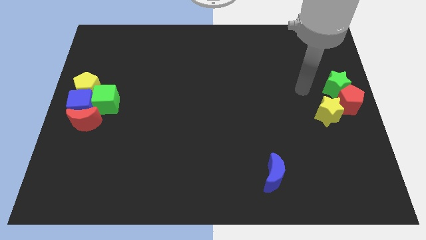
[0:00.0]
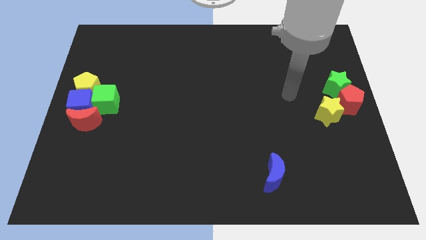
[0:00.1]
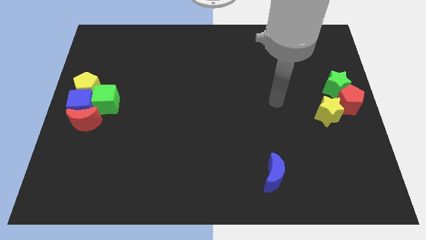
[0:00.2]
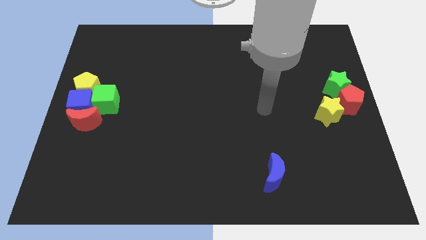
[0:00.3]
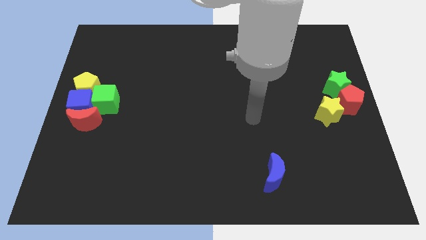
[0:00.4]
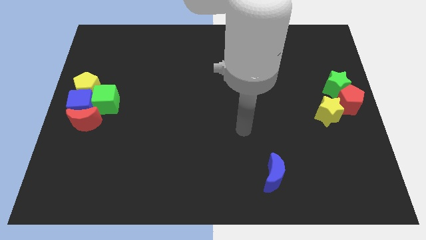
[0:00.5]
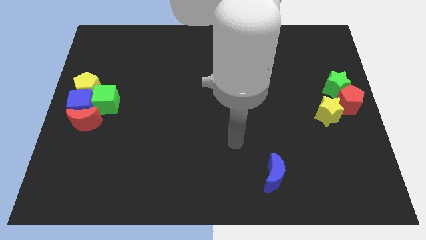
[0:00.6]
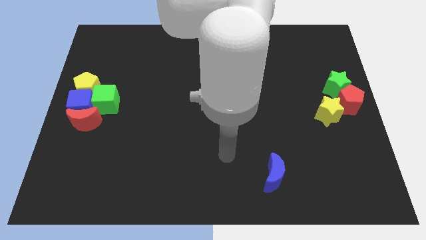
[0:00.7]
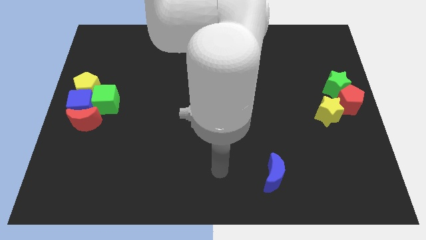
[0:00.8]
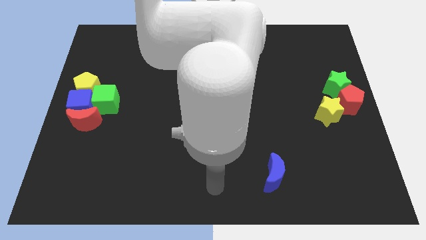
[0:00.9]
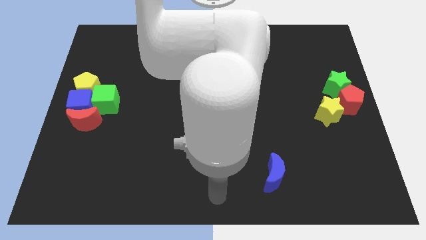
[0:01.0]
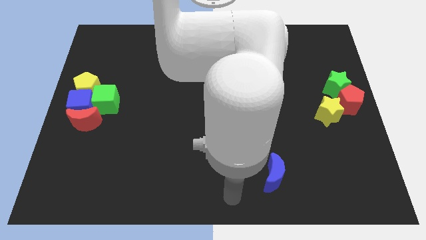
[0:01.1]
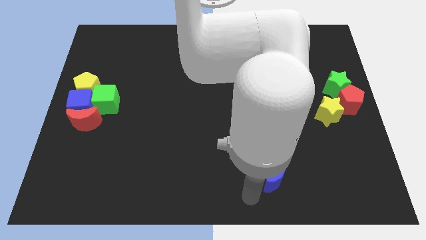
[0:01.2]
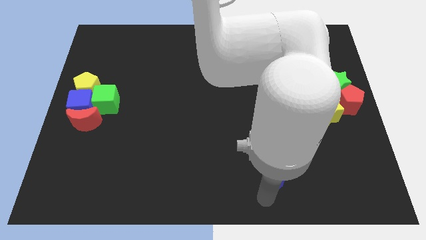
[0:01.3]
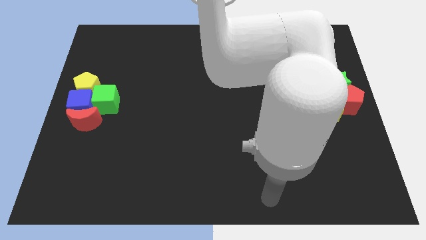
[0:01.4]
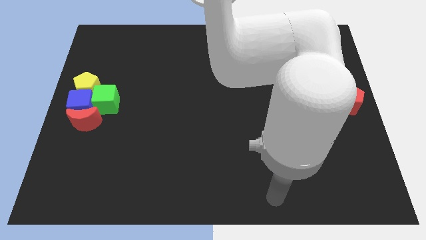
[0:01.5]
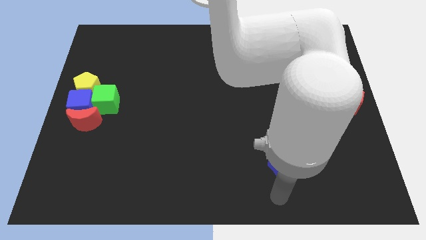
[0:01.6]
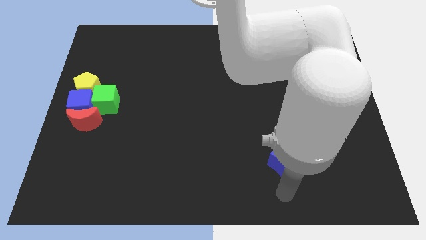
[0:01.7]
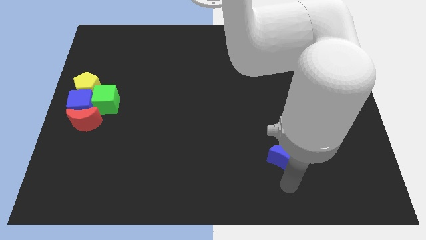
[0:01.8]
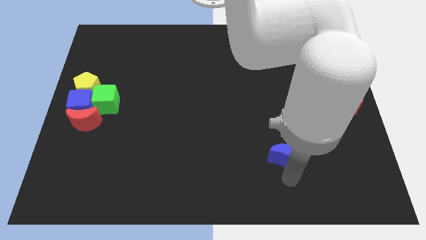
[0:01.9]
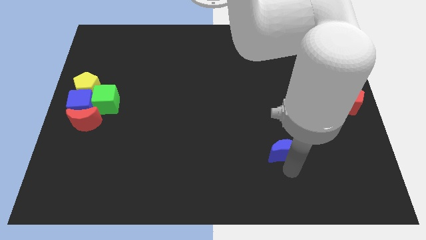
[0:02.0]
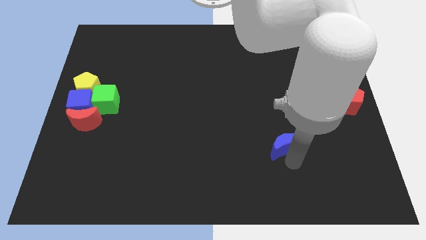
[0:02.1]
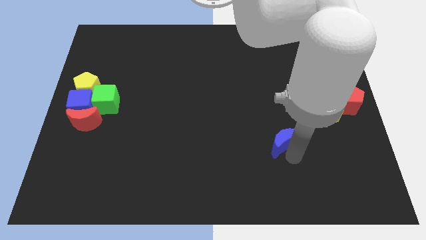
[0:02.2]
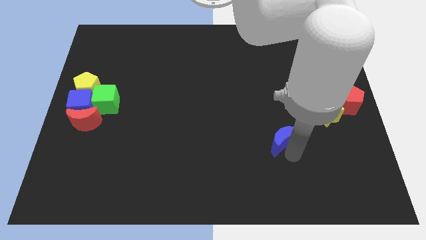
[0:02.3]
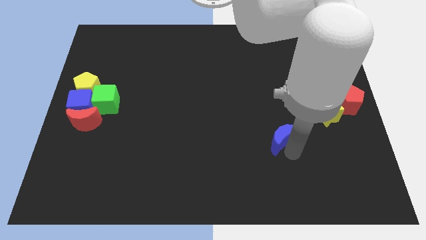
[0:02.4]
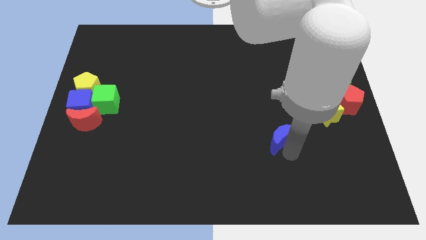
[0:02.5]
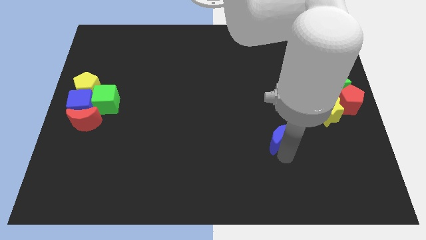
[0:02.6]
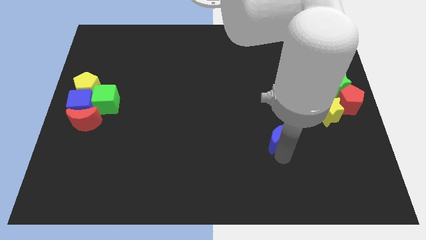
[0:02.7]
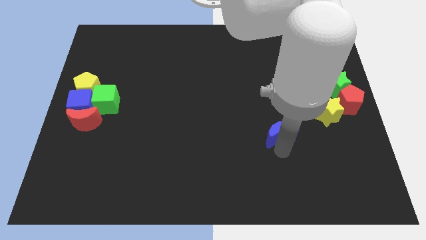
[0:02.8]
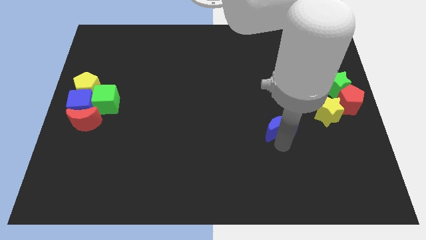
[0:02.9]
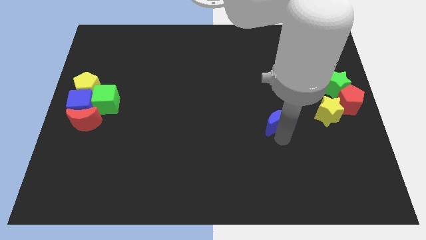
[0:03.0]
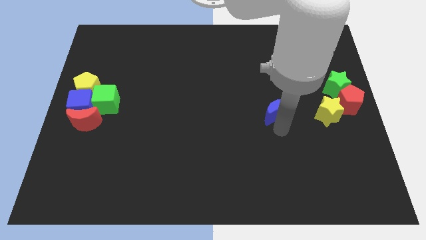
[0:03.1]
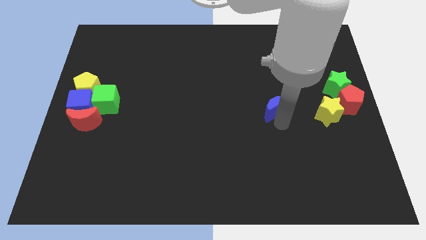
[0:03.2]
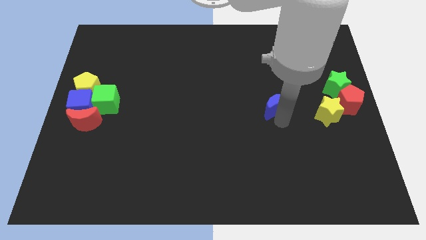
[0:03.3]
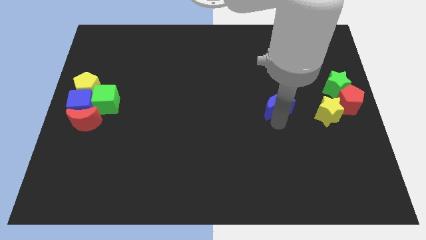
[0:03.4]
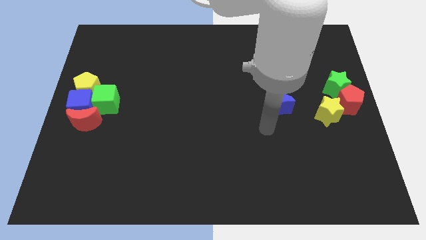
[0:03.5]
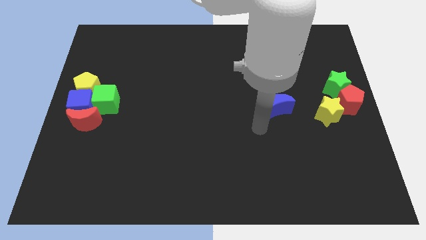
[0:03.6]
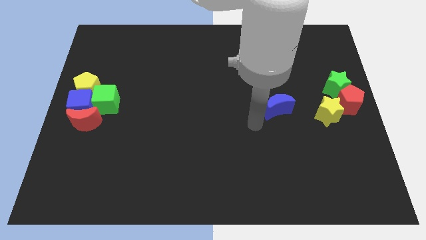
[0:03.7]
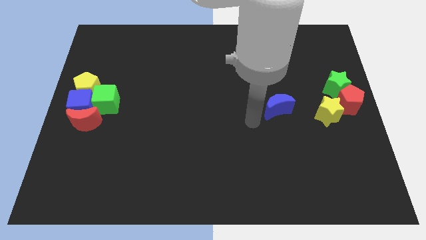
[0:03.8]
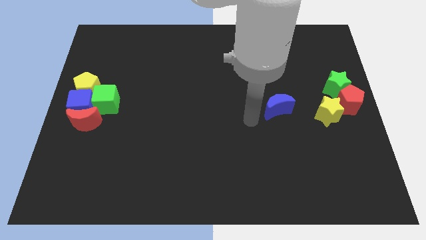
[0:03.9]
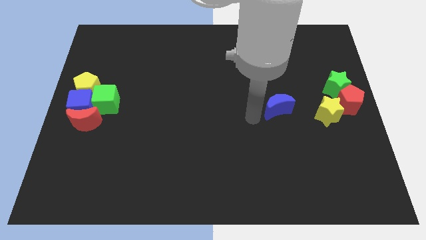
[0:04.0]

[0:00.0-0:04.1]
put the blue crescent horizontally to the left side of the yellow star

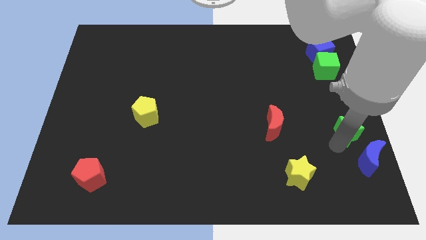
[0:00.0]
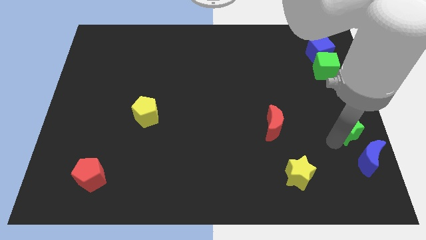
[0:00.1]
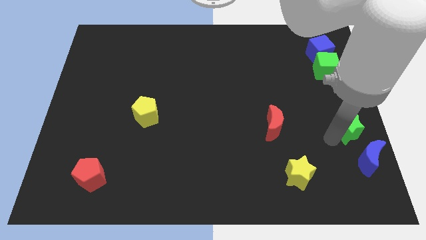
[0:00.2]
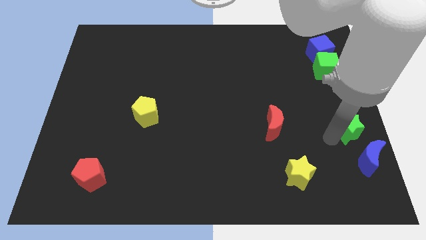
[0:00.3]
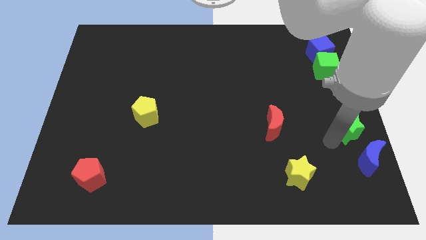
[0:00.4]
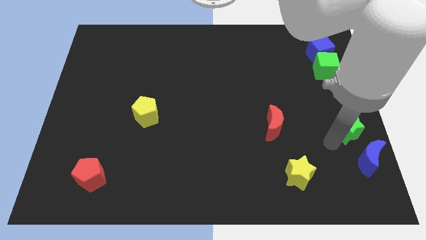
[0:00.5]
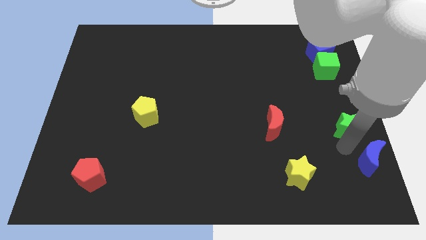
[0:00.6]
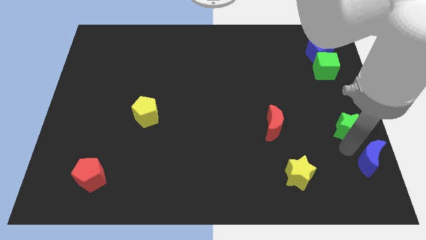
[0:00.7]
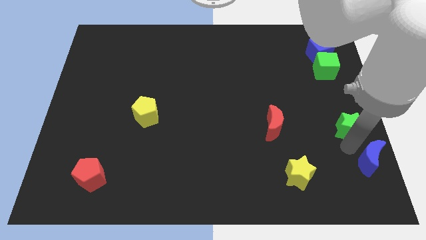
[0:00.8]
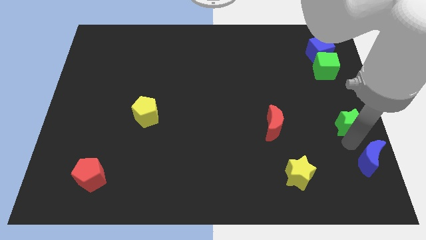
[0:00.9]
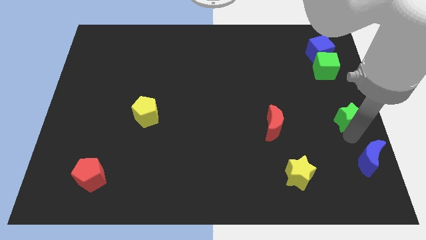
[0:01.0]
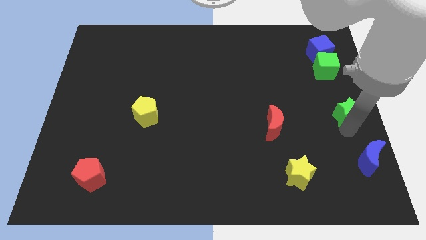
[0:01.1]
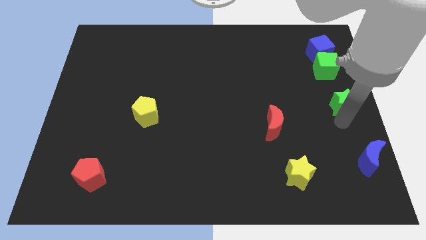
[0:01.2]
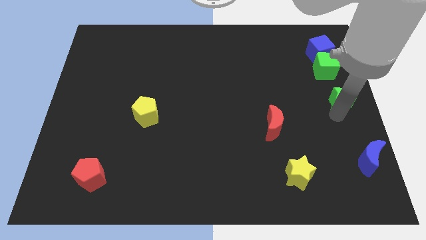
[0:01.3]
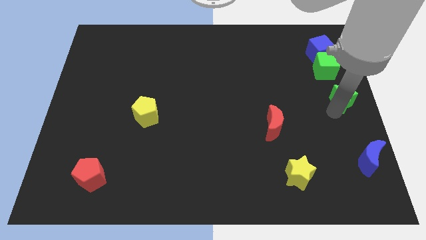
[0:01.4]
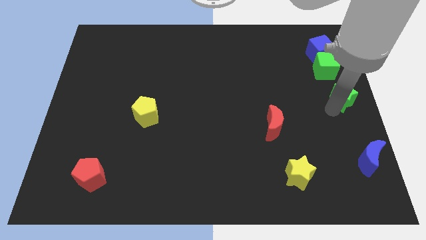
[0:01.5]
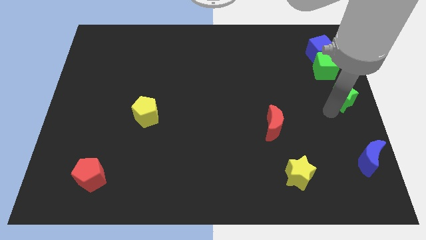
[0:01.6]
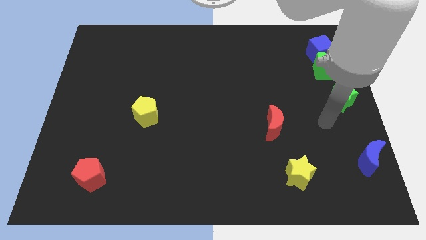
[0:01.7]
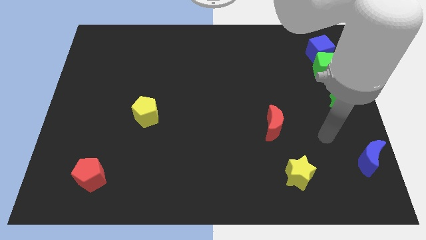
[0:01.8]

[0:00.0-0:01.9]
place the green star close to the green cube

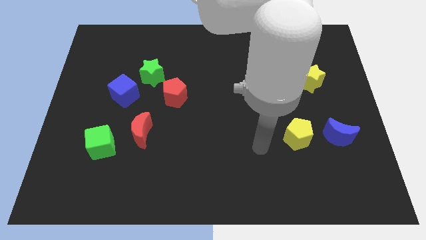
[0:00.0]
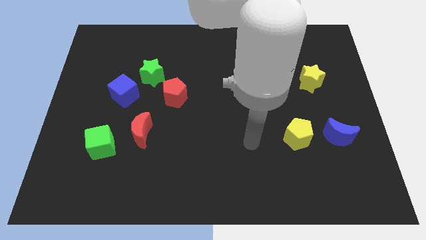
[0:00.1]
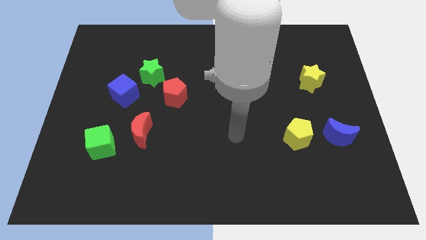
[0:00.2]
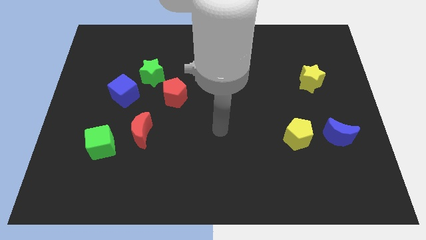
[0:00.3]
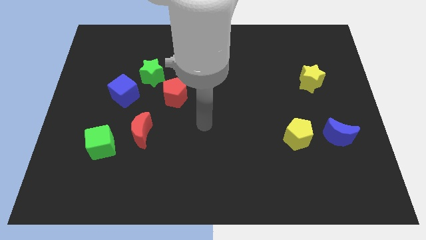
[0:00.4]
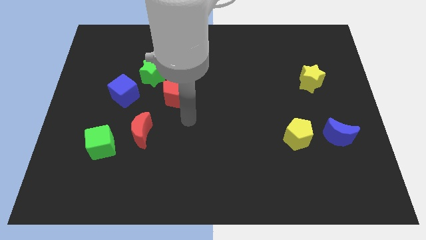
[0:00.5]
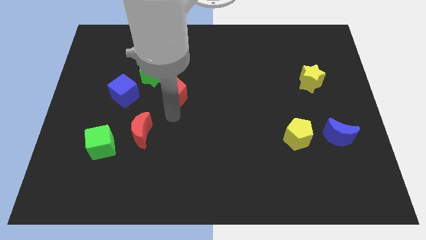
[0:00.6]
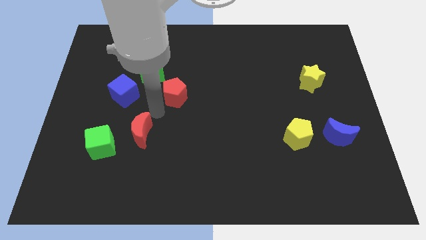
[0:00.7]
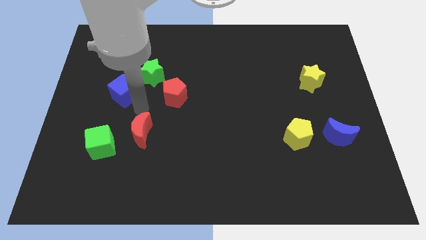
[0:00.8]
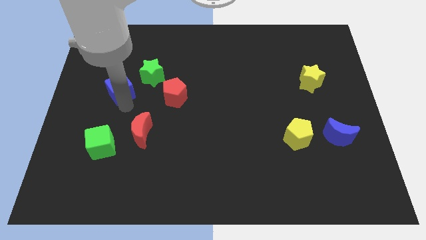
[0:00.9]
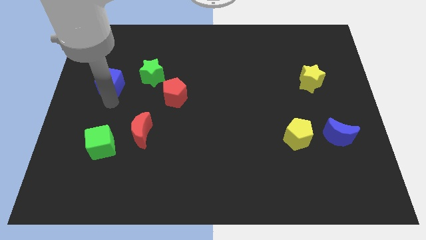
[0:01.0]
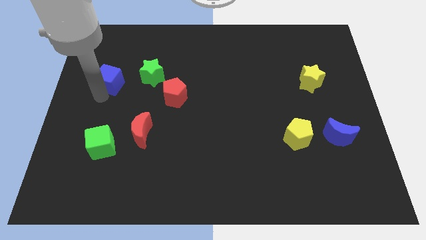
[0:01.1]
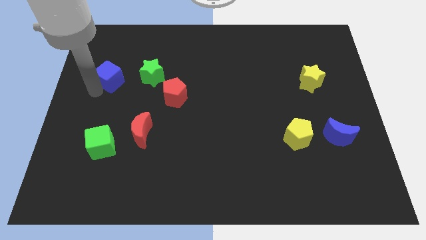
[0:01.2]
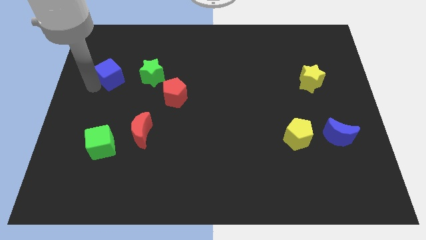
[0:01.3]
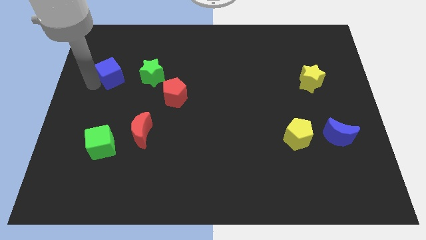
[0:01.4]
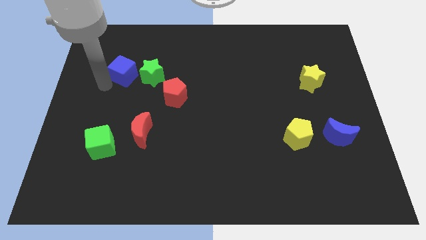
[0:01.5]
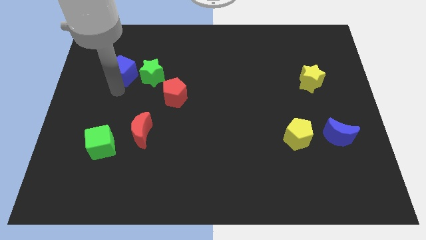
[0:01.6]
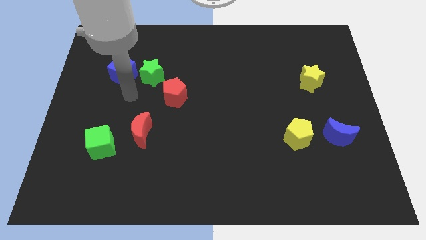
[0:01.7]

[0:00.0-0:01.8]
push the blue cube to the left side of the green star

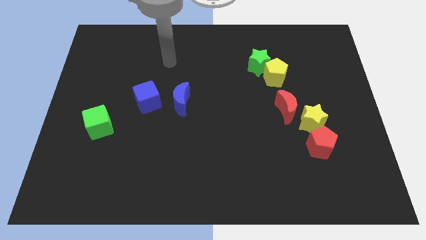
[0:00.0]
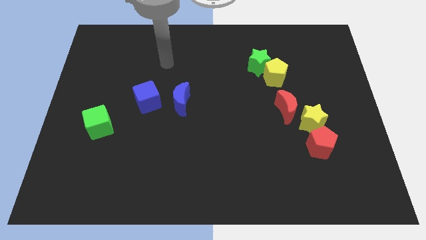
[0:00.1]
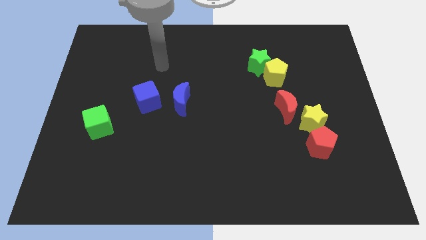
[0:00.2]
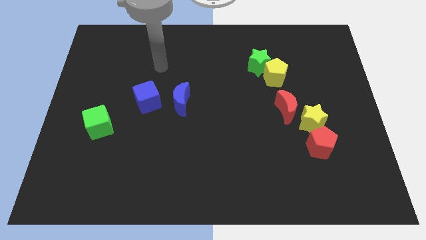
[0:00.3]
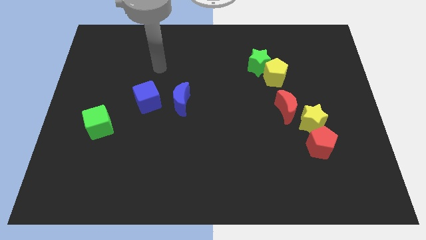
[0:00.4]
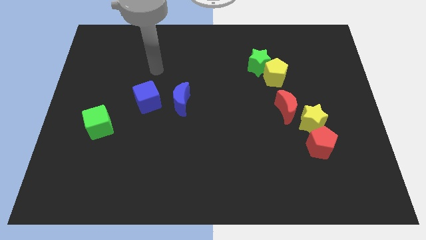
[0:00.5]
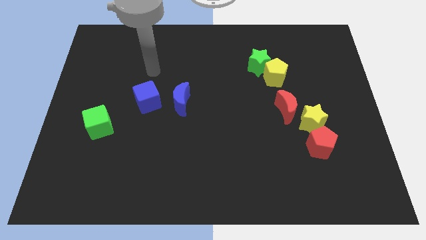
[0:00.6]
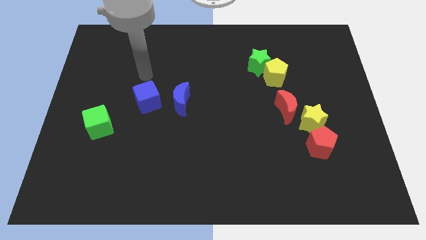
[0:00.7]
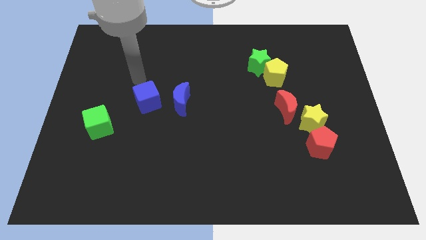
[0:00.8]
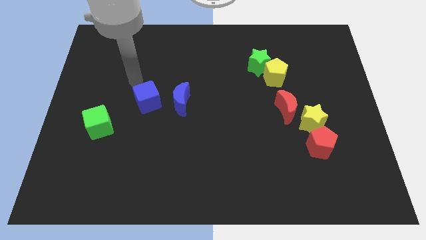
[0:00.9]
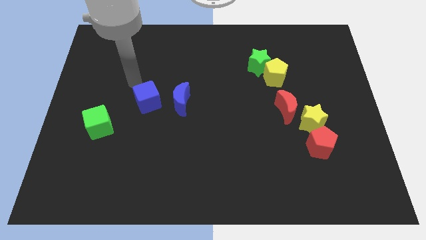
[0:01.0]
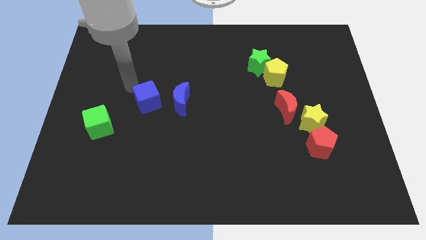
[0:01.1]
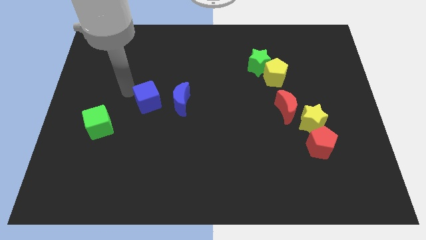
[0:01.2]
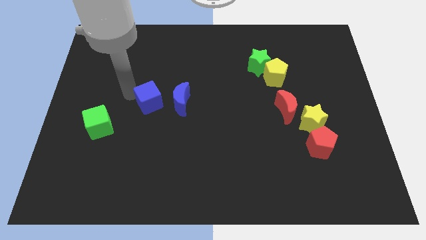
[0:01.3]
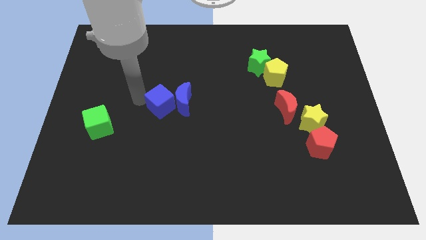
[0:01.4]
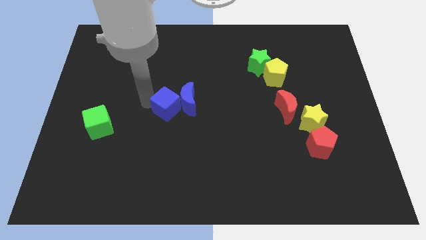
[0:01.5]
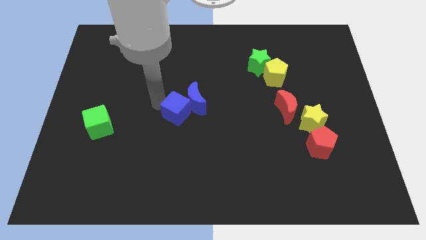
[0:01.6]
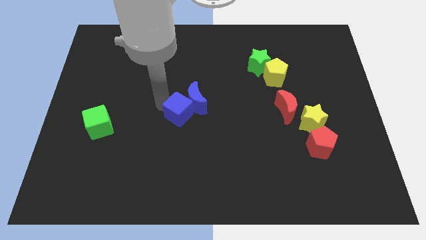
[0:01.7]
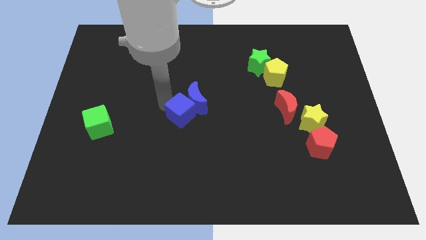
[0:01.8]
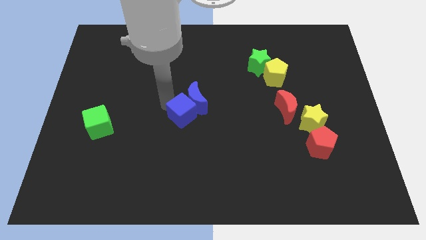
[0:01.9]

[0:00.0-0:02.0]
move blue cube into the blue moon
